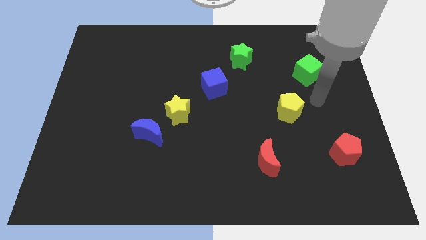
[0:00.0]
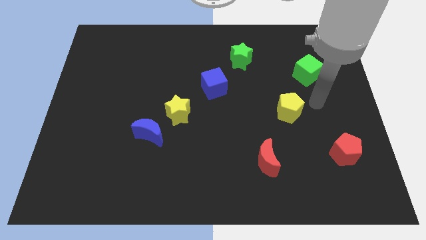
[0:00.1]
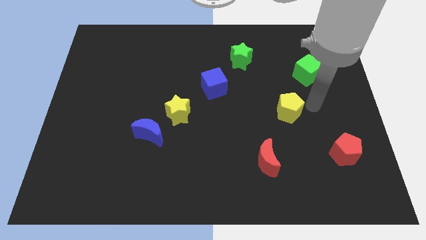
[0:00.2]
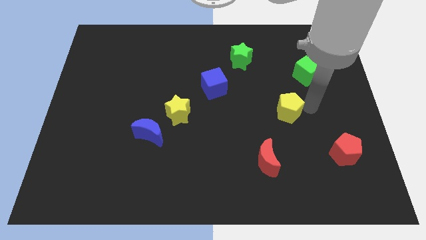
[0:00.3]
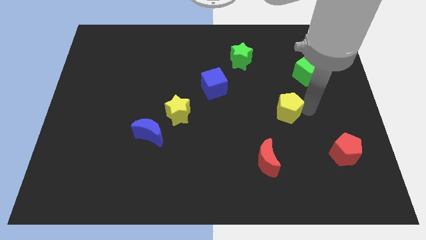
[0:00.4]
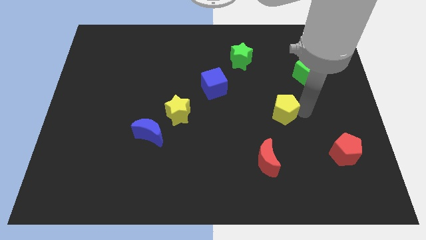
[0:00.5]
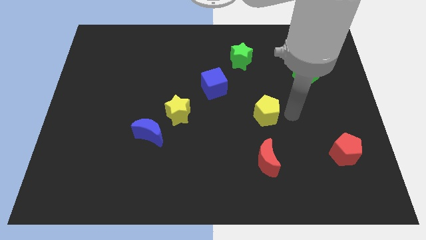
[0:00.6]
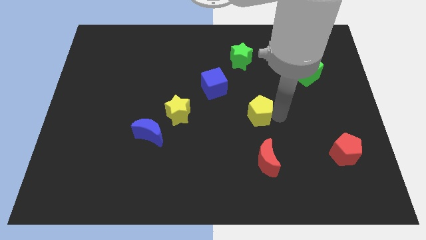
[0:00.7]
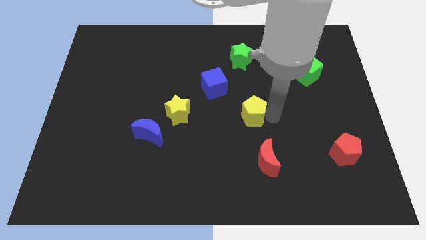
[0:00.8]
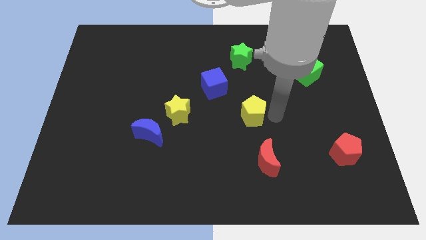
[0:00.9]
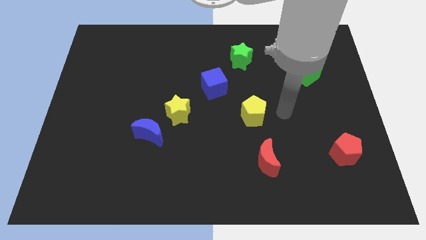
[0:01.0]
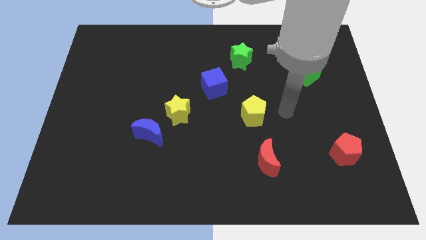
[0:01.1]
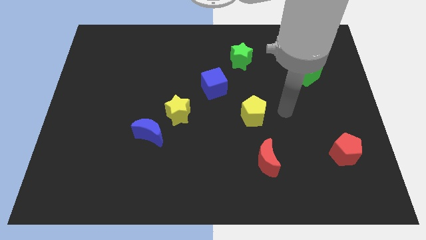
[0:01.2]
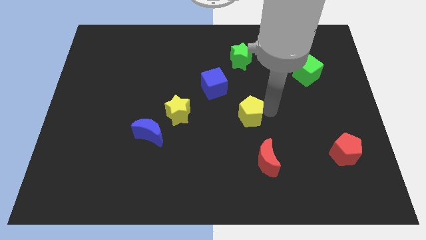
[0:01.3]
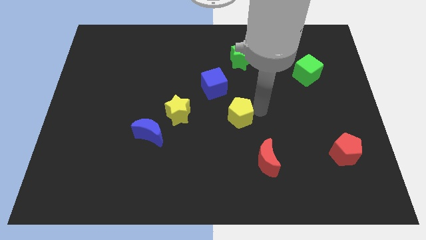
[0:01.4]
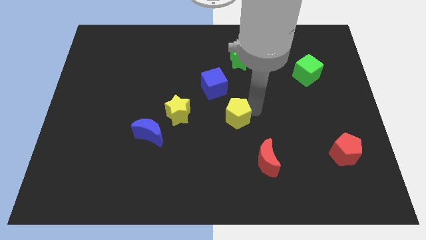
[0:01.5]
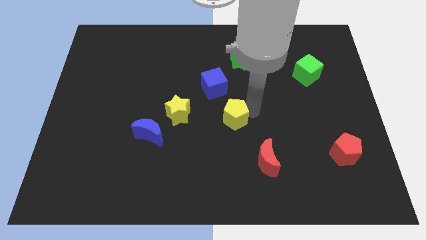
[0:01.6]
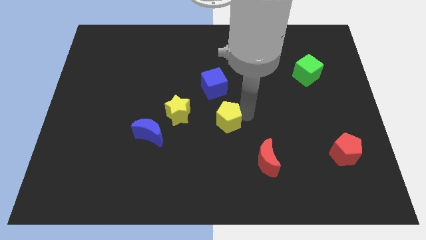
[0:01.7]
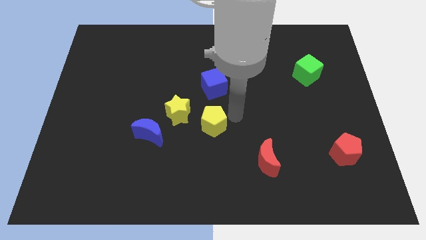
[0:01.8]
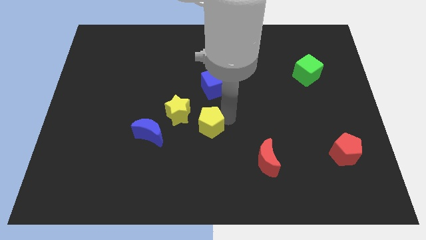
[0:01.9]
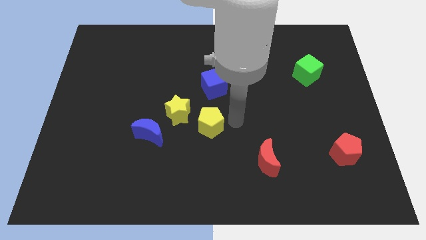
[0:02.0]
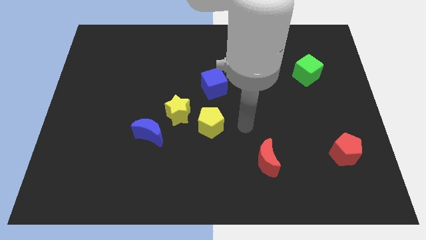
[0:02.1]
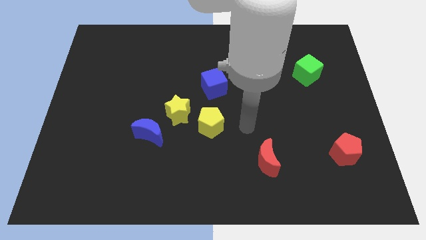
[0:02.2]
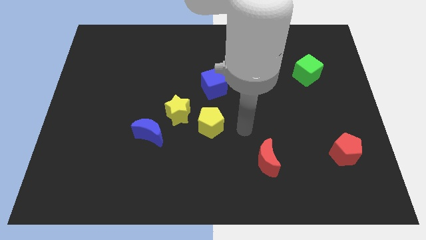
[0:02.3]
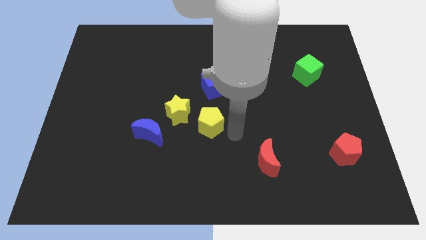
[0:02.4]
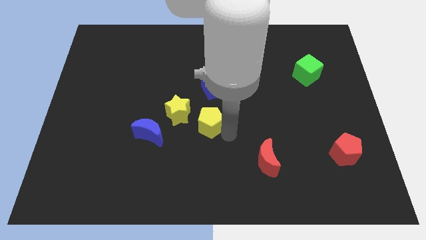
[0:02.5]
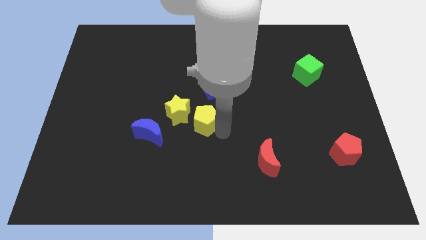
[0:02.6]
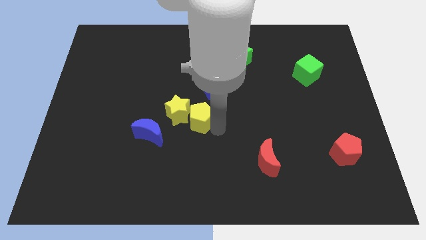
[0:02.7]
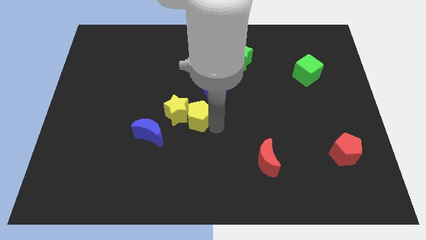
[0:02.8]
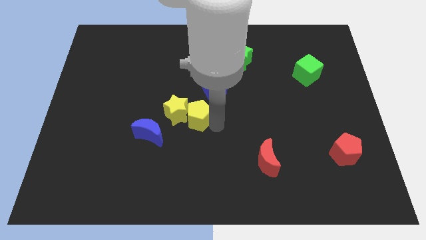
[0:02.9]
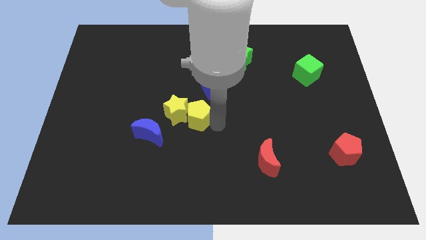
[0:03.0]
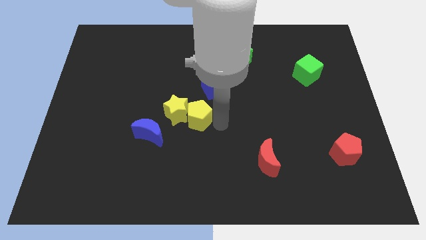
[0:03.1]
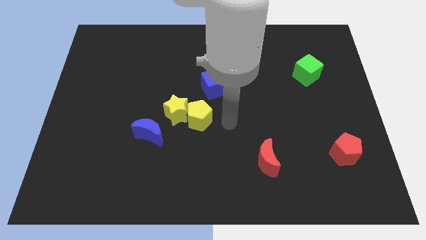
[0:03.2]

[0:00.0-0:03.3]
push the yellow pentagon into the yellow star

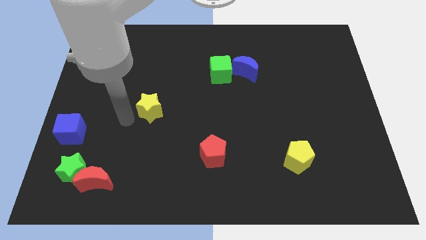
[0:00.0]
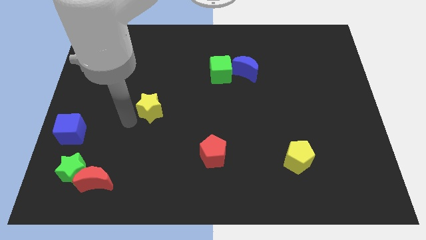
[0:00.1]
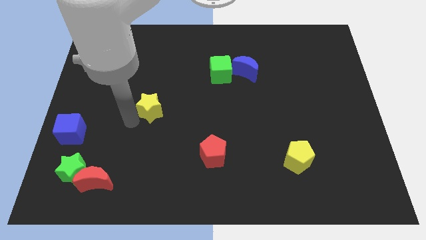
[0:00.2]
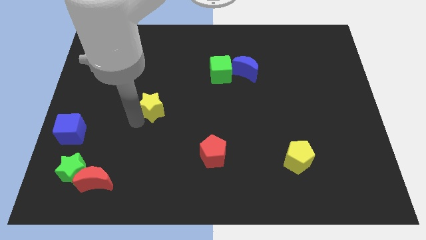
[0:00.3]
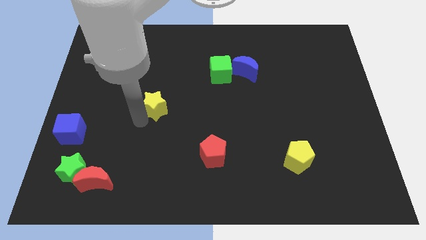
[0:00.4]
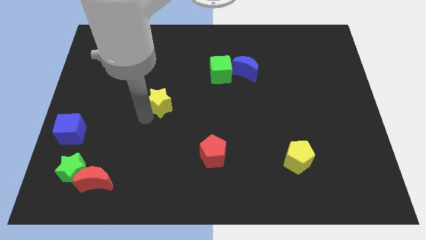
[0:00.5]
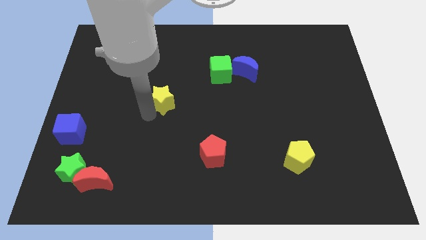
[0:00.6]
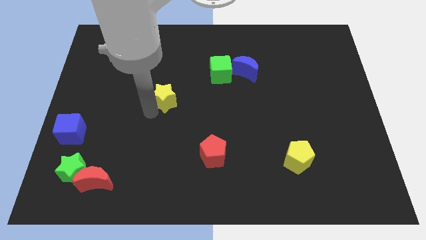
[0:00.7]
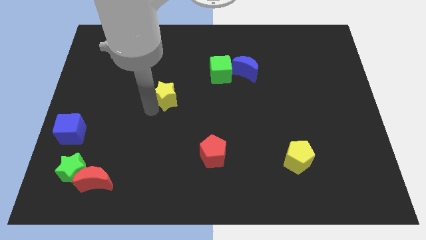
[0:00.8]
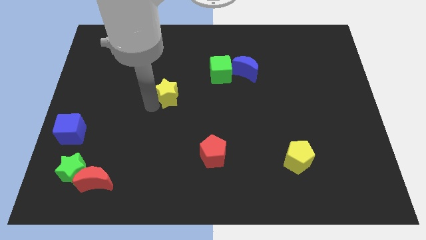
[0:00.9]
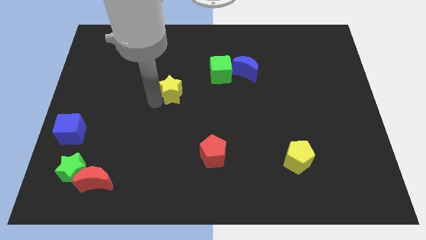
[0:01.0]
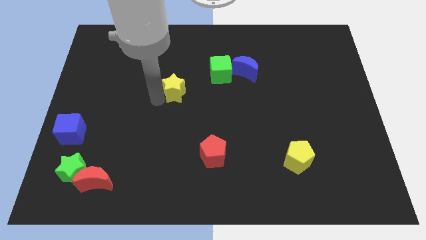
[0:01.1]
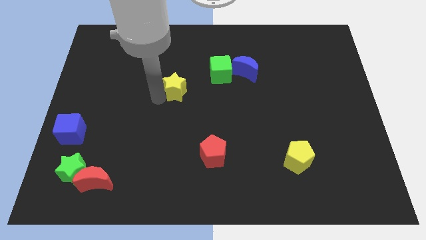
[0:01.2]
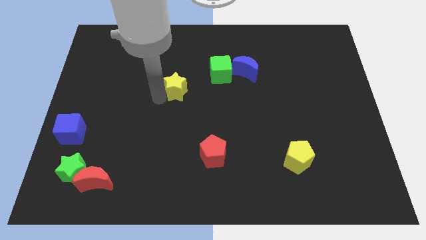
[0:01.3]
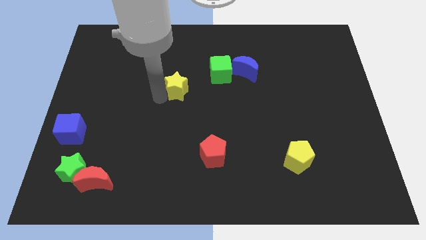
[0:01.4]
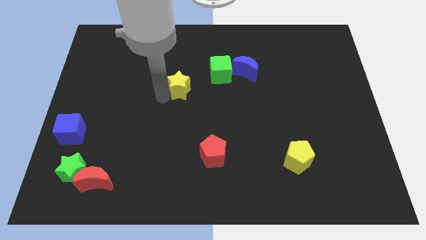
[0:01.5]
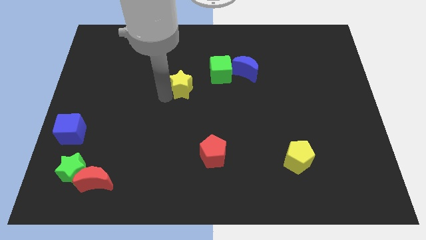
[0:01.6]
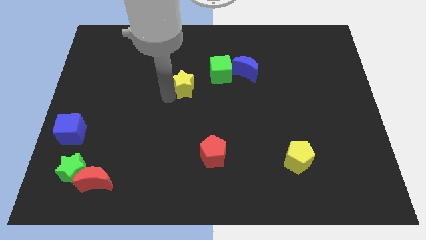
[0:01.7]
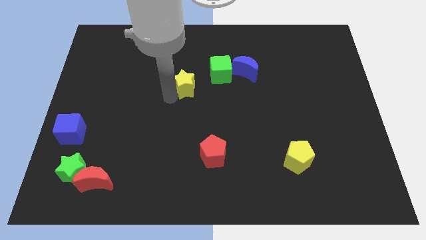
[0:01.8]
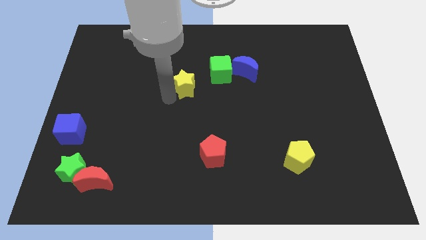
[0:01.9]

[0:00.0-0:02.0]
push the yellow star towards the left side of the green cube

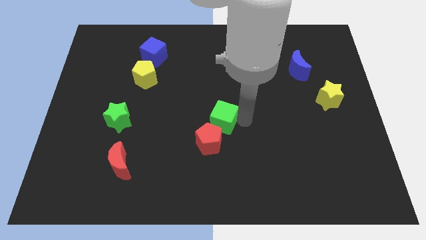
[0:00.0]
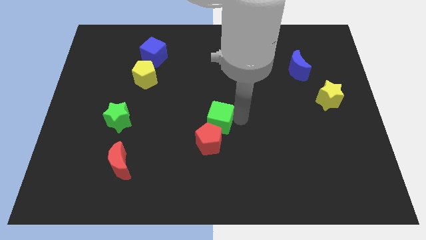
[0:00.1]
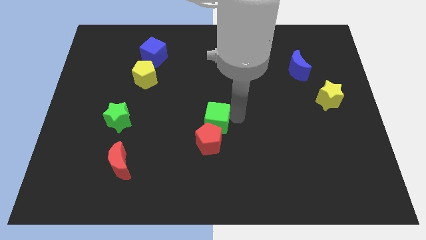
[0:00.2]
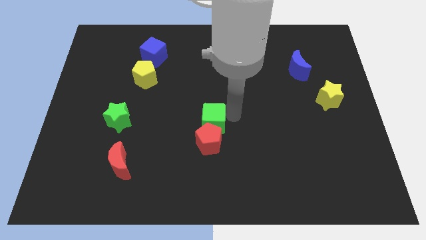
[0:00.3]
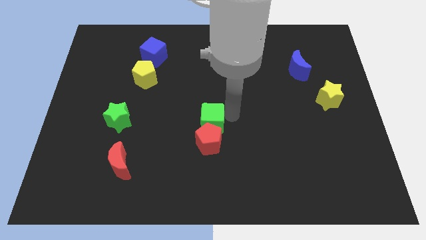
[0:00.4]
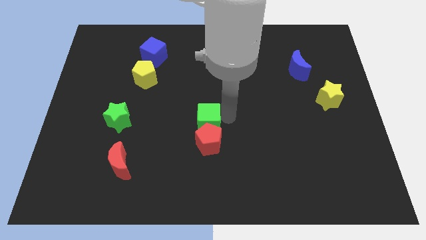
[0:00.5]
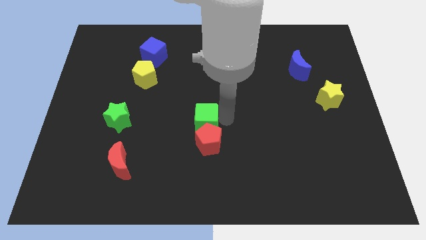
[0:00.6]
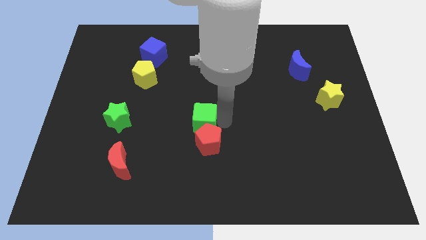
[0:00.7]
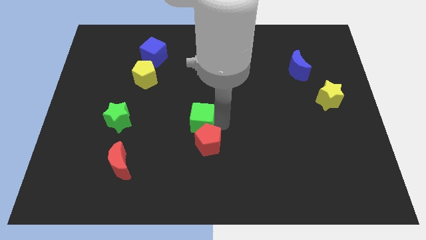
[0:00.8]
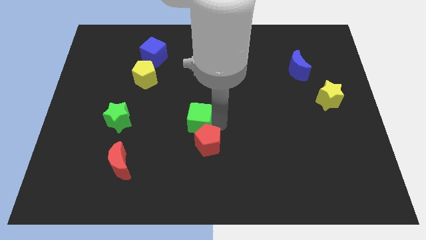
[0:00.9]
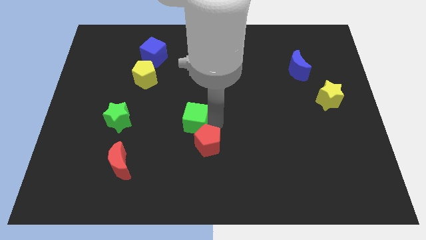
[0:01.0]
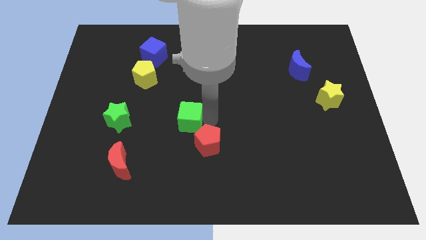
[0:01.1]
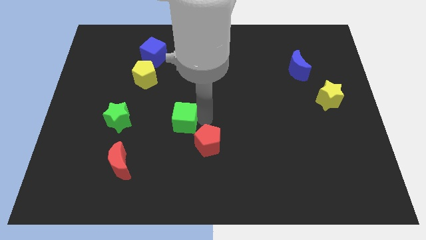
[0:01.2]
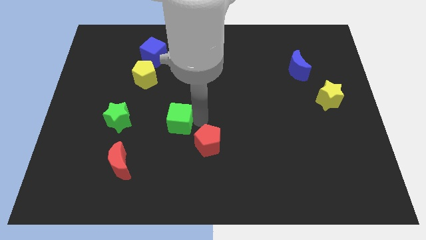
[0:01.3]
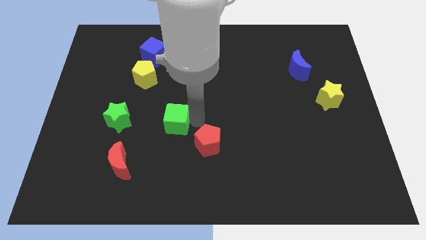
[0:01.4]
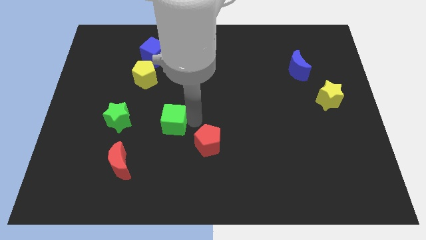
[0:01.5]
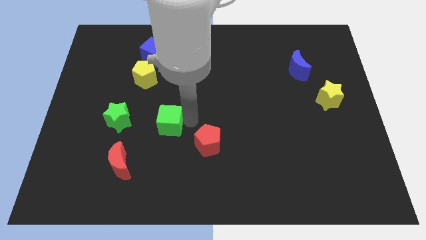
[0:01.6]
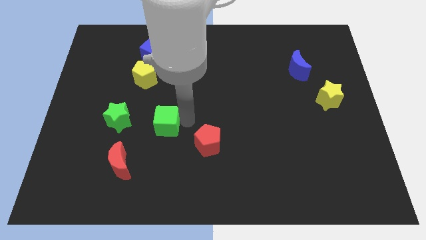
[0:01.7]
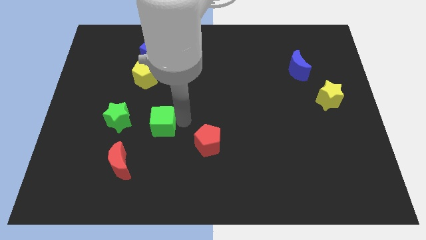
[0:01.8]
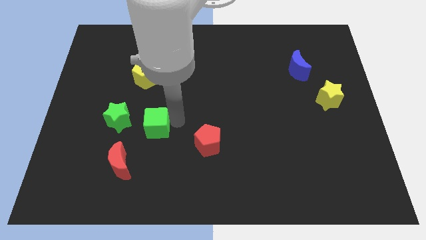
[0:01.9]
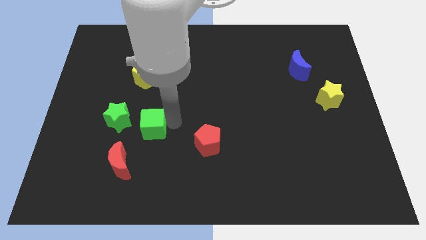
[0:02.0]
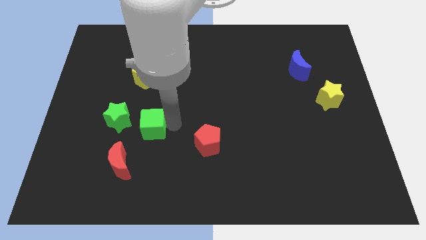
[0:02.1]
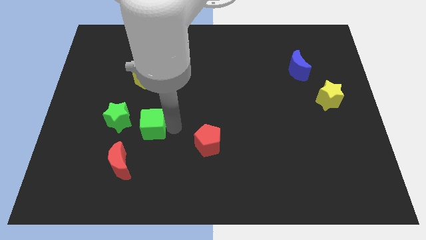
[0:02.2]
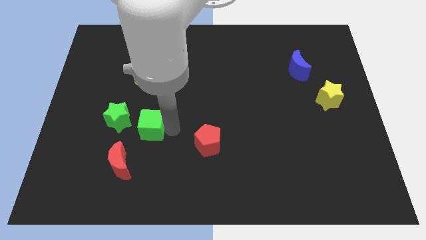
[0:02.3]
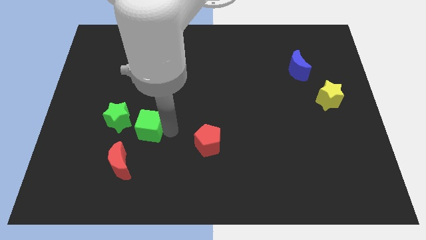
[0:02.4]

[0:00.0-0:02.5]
move green cube towards green star

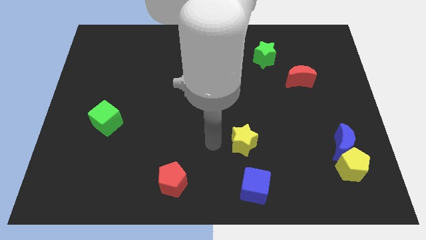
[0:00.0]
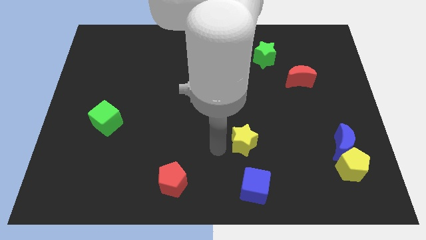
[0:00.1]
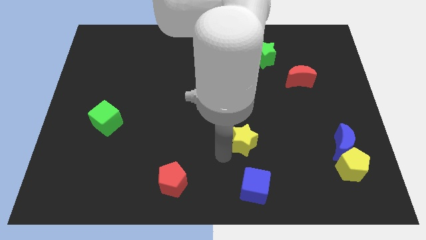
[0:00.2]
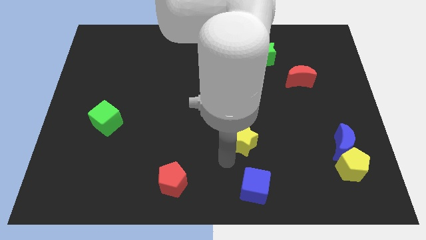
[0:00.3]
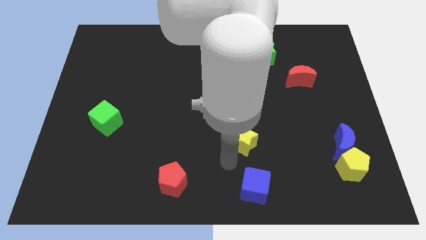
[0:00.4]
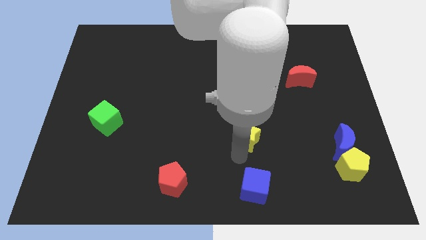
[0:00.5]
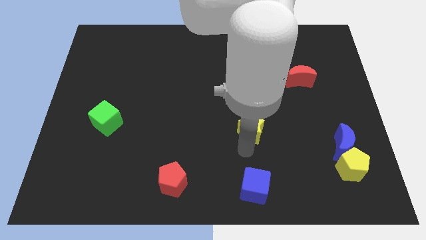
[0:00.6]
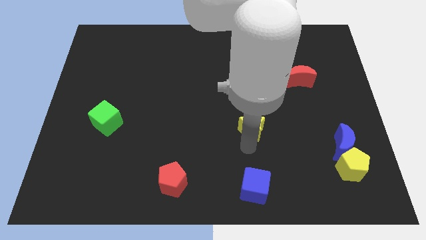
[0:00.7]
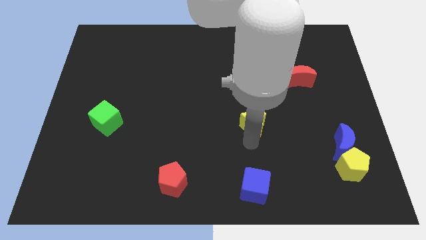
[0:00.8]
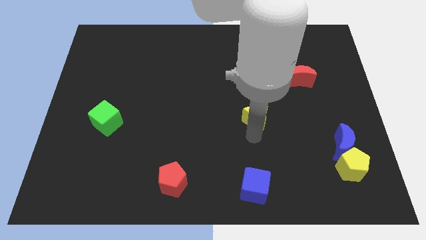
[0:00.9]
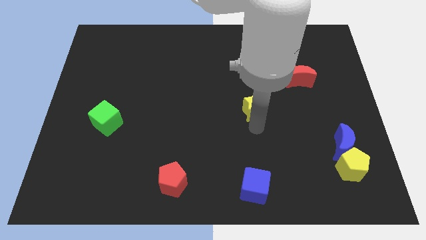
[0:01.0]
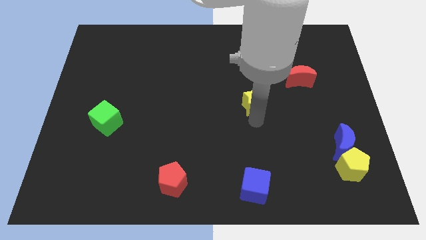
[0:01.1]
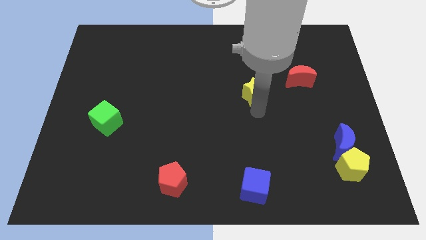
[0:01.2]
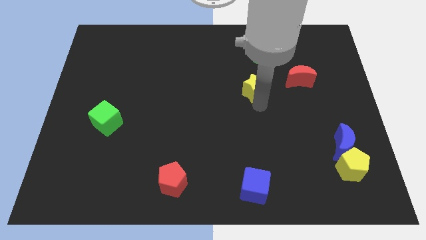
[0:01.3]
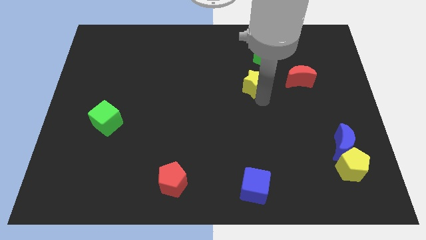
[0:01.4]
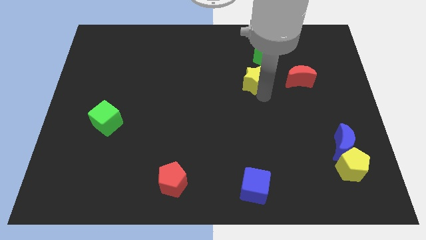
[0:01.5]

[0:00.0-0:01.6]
move the yellow star to the top side of the board
